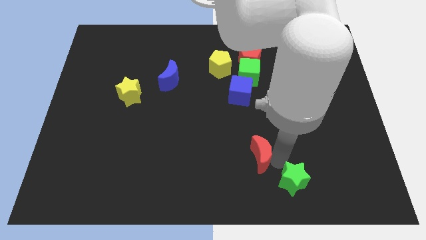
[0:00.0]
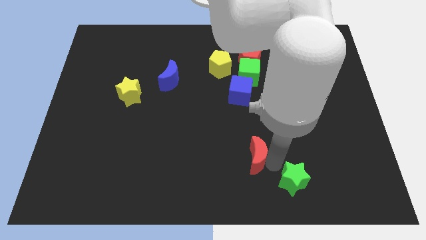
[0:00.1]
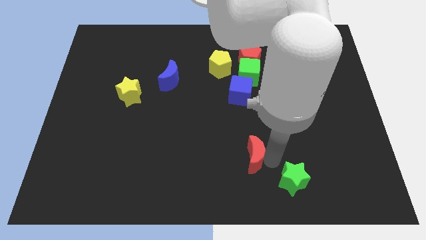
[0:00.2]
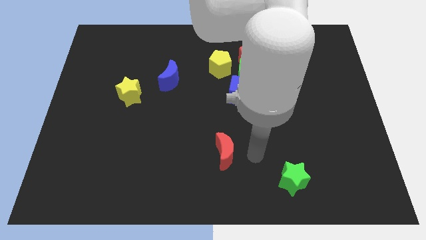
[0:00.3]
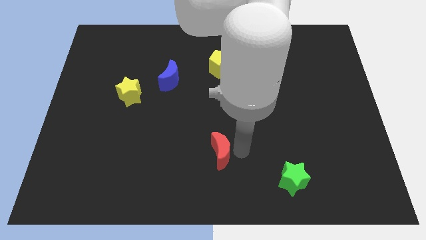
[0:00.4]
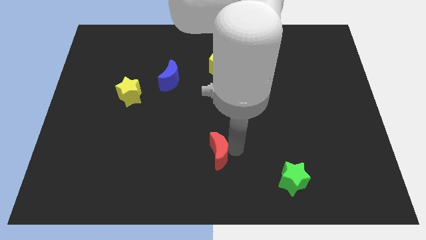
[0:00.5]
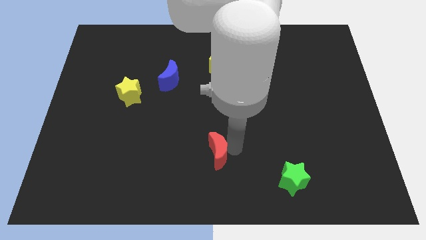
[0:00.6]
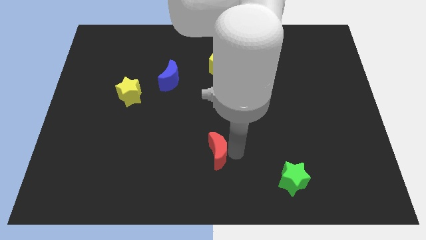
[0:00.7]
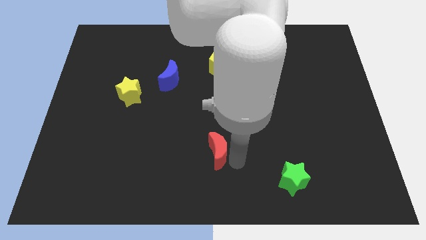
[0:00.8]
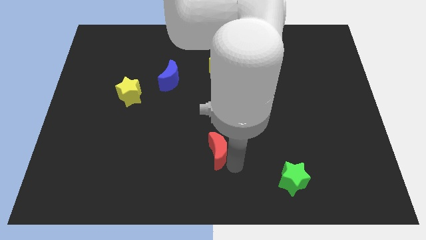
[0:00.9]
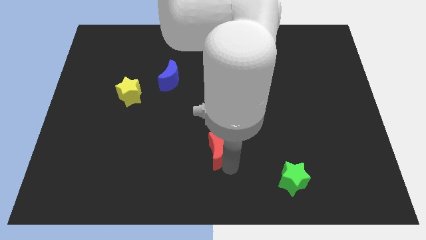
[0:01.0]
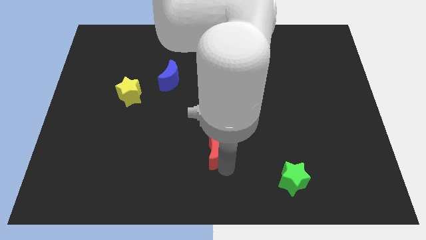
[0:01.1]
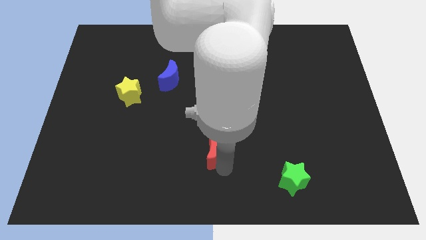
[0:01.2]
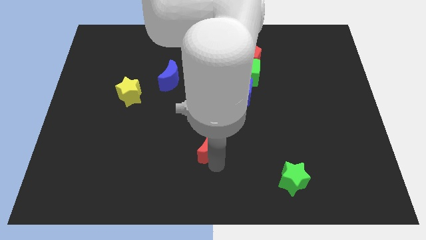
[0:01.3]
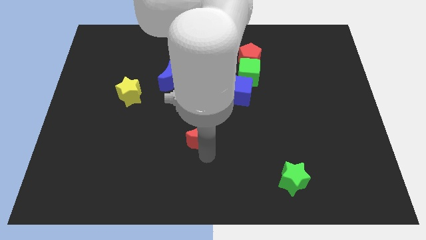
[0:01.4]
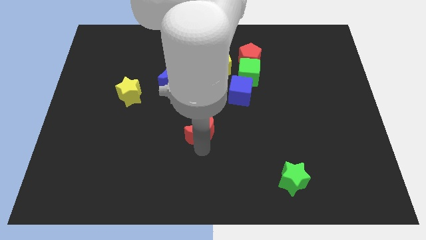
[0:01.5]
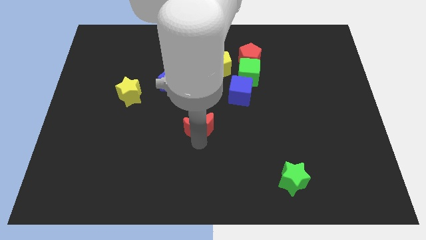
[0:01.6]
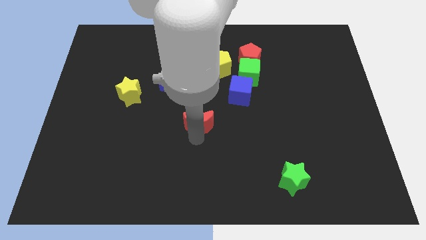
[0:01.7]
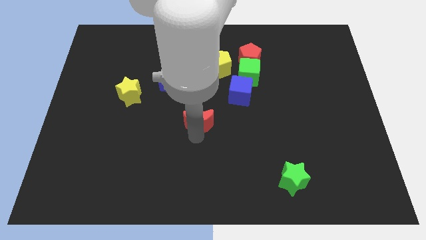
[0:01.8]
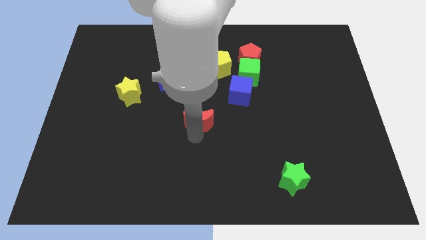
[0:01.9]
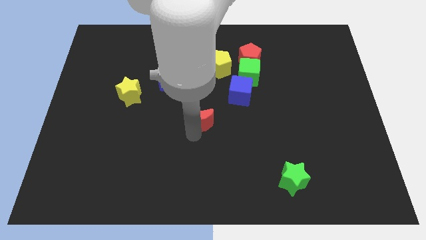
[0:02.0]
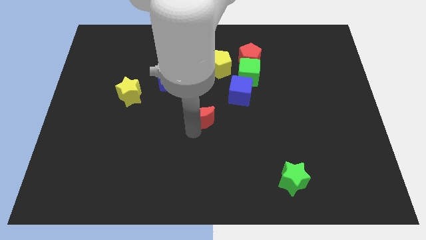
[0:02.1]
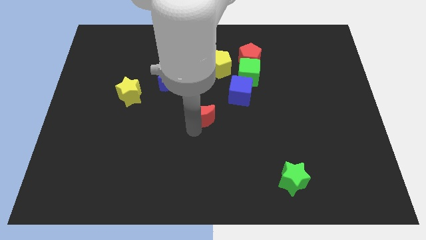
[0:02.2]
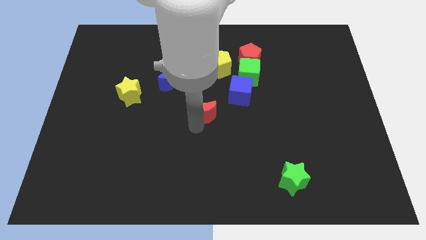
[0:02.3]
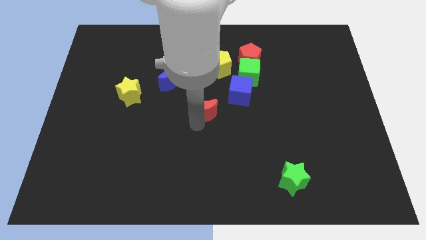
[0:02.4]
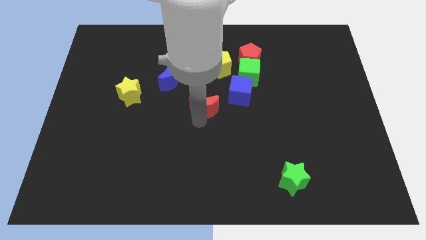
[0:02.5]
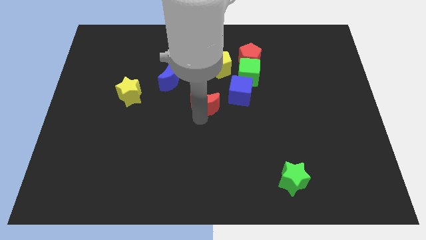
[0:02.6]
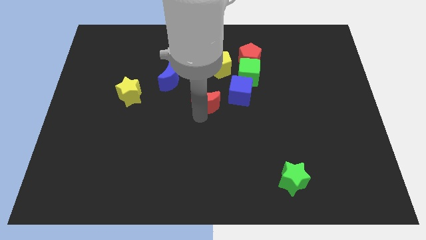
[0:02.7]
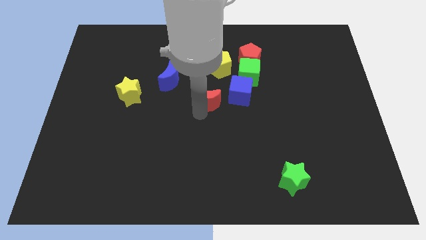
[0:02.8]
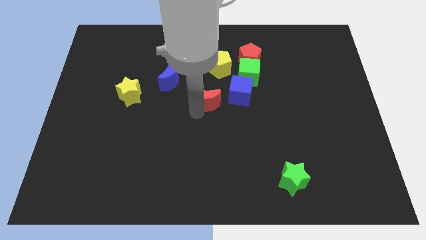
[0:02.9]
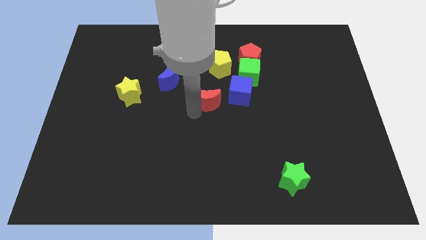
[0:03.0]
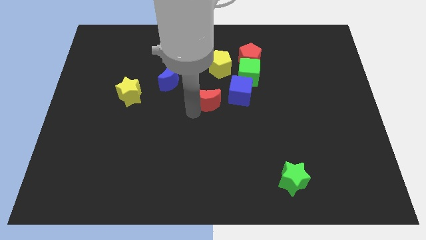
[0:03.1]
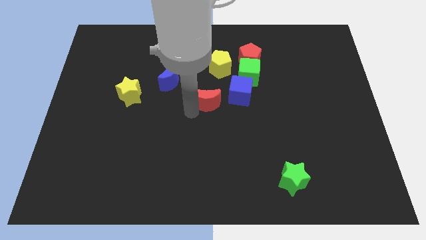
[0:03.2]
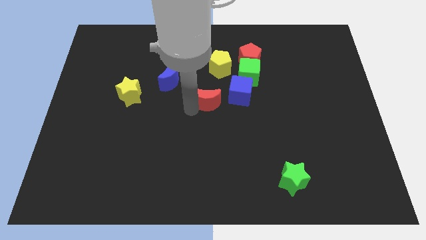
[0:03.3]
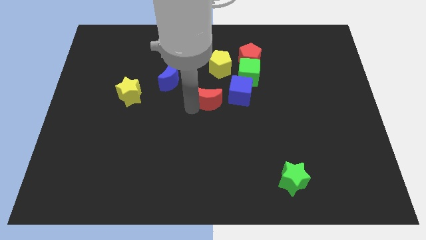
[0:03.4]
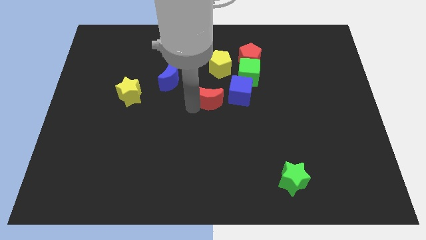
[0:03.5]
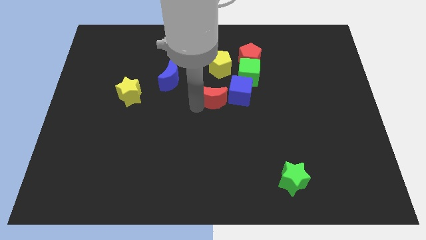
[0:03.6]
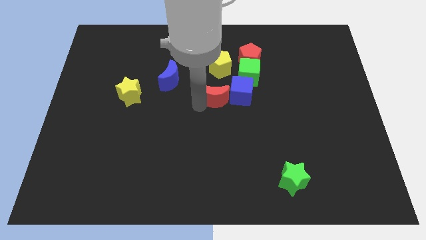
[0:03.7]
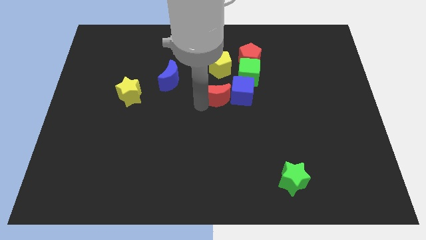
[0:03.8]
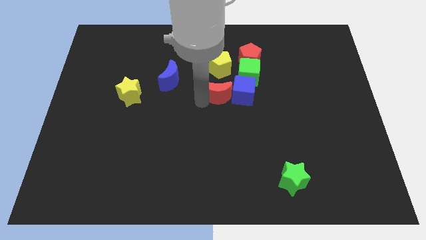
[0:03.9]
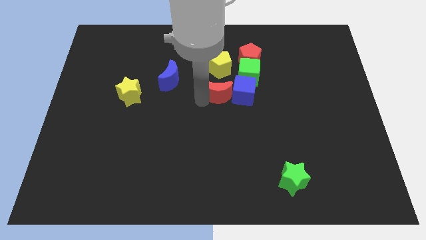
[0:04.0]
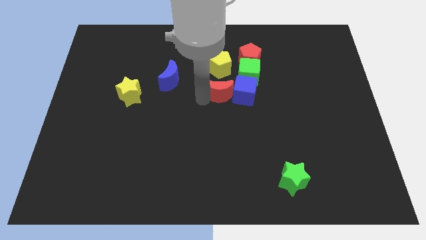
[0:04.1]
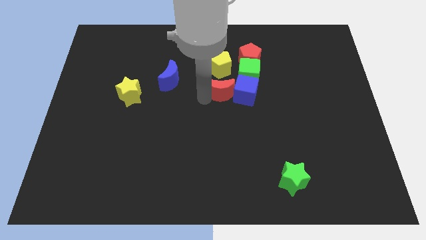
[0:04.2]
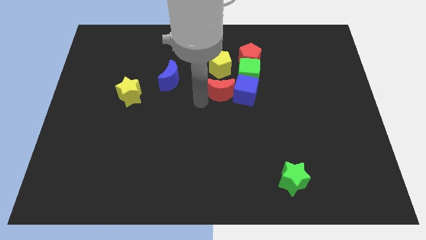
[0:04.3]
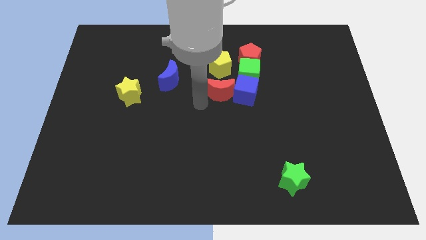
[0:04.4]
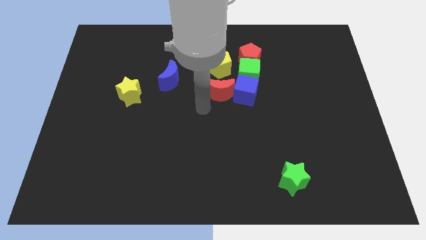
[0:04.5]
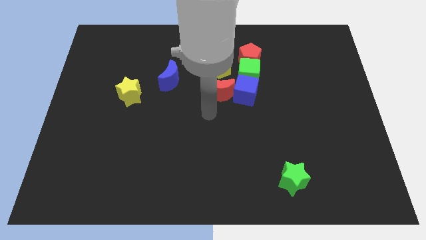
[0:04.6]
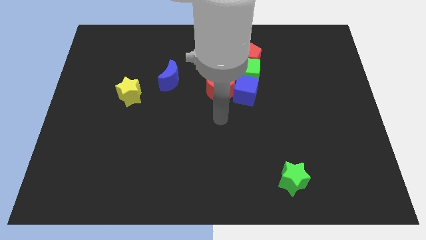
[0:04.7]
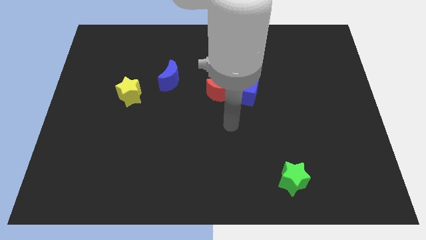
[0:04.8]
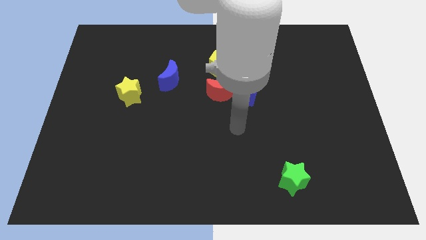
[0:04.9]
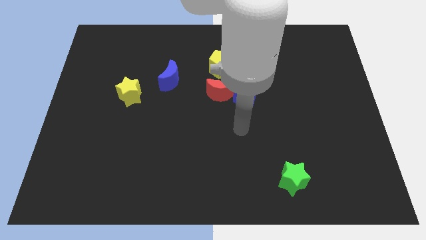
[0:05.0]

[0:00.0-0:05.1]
place the red moon in between the blue cube and blue moon

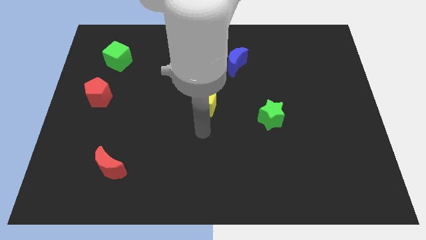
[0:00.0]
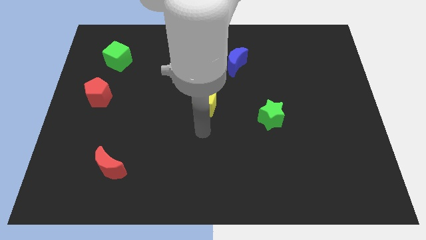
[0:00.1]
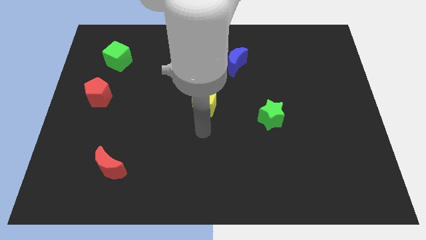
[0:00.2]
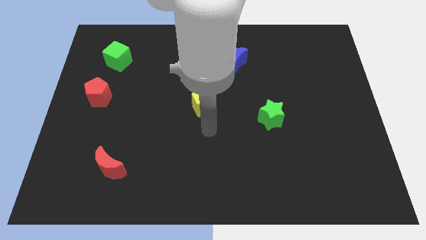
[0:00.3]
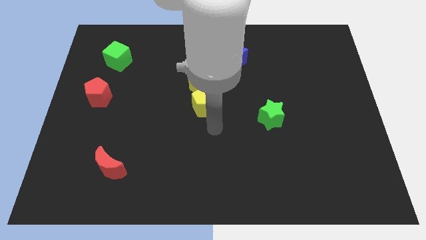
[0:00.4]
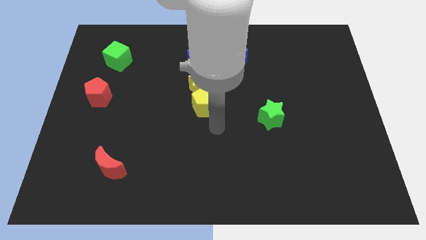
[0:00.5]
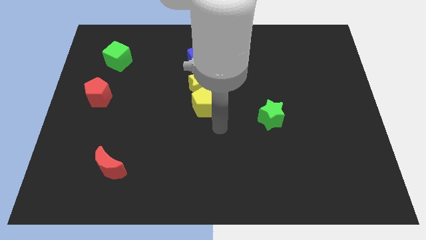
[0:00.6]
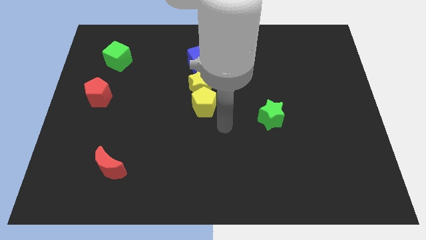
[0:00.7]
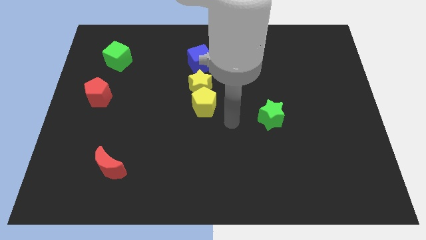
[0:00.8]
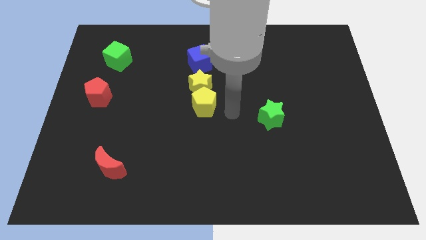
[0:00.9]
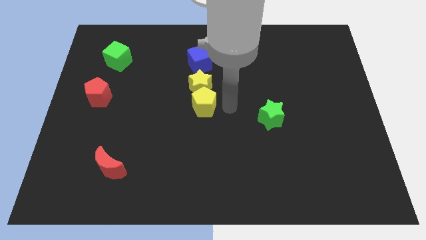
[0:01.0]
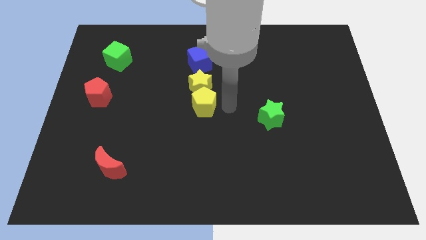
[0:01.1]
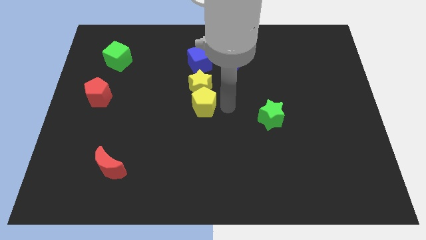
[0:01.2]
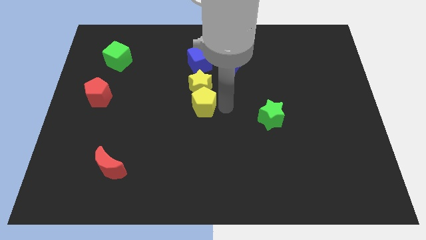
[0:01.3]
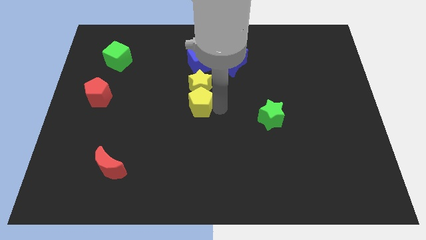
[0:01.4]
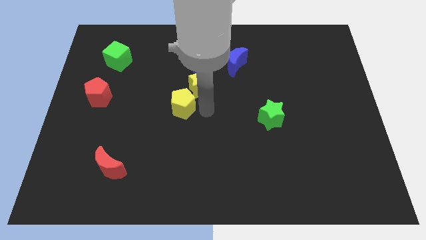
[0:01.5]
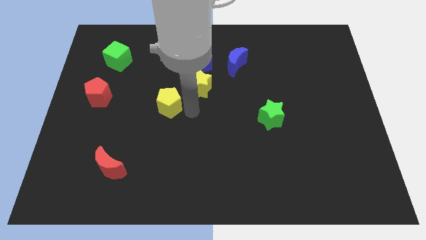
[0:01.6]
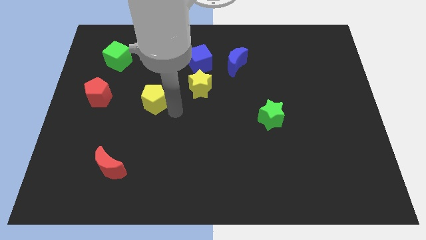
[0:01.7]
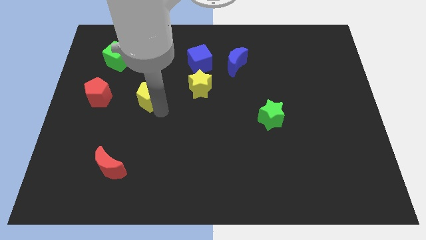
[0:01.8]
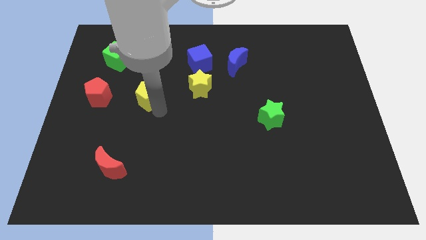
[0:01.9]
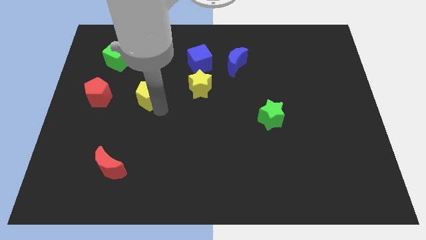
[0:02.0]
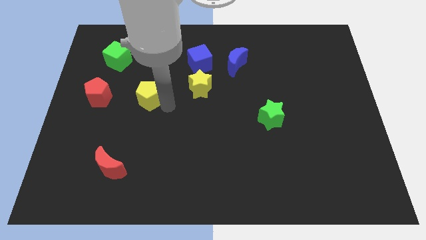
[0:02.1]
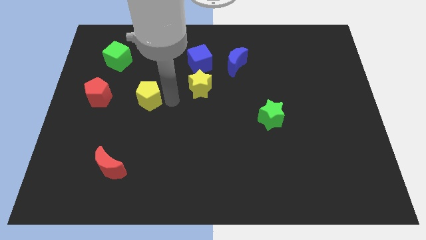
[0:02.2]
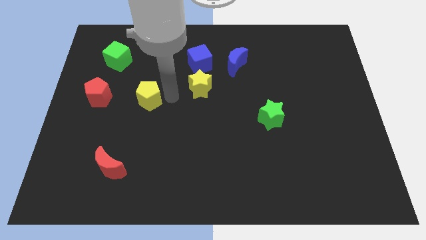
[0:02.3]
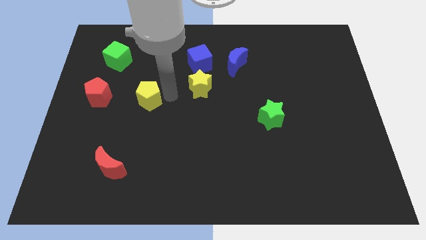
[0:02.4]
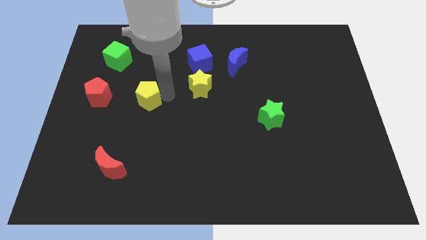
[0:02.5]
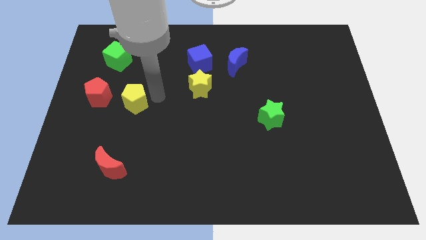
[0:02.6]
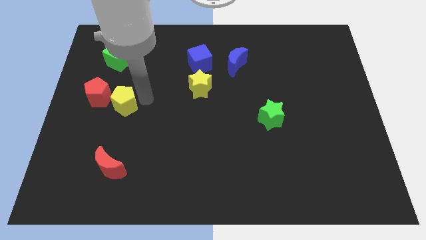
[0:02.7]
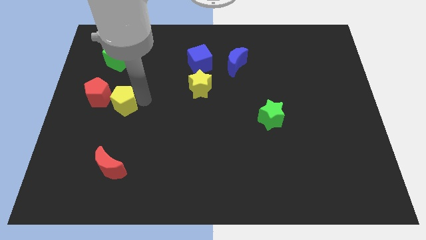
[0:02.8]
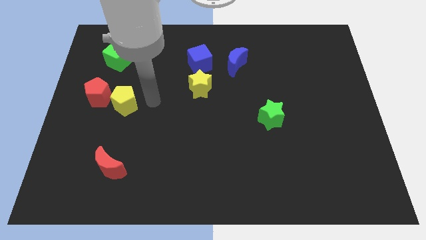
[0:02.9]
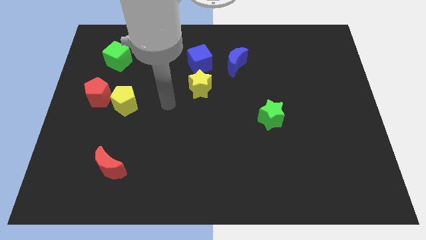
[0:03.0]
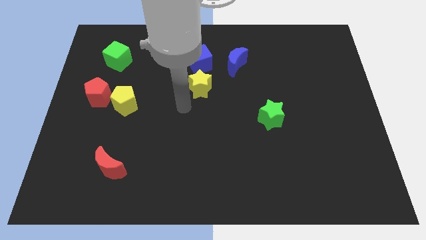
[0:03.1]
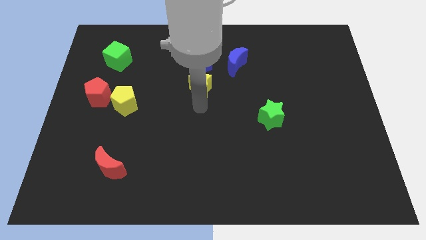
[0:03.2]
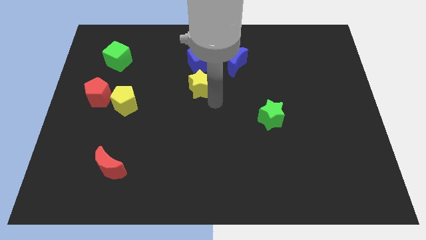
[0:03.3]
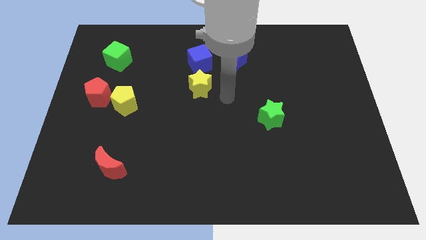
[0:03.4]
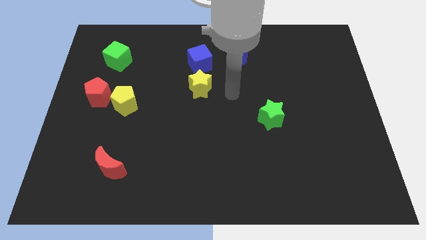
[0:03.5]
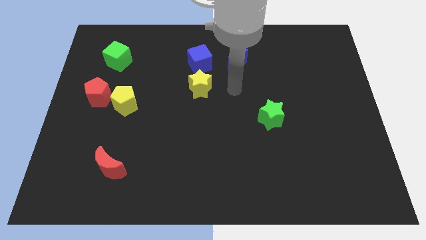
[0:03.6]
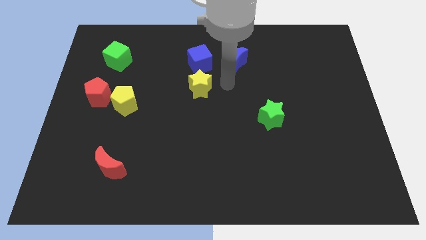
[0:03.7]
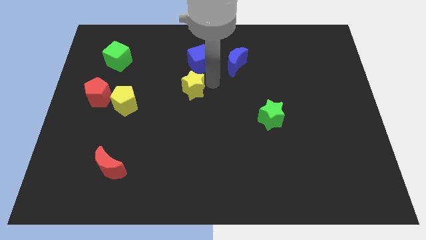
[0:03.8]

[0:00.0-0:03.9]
drag the yellow pentagon to the red pentagon
